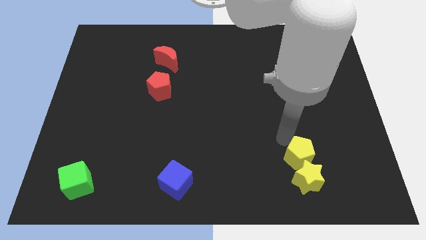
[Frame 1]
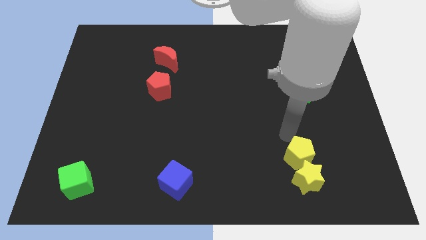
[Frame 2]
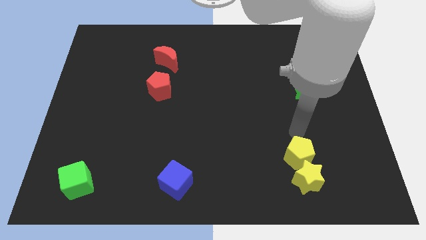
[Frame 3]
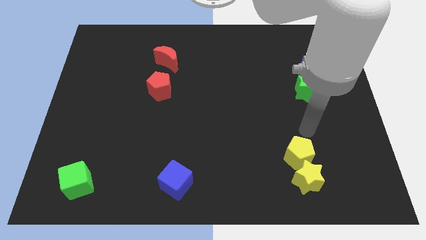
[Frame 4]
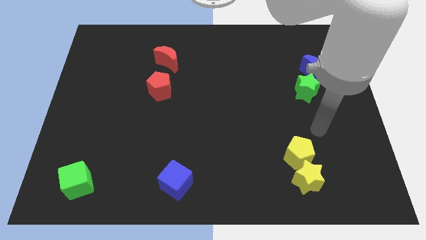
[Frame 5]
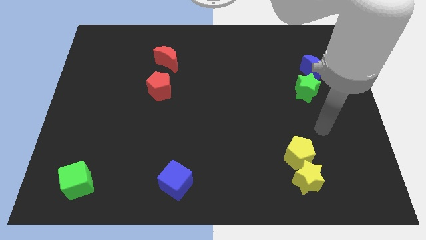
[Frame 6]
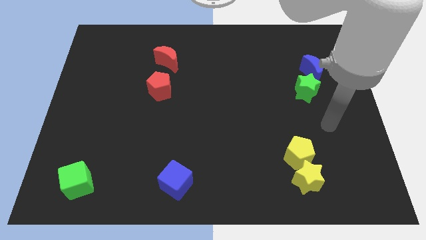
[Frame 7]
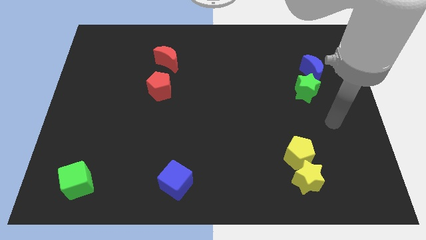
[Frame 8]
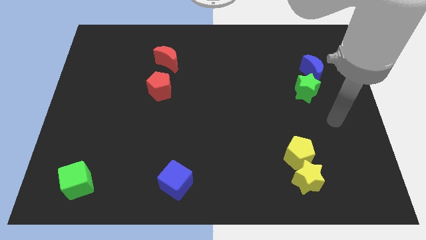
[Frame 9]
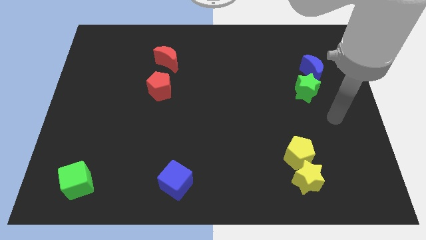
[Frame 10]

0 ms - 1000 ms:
push yellow pentagon in to yellow star

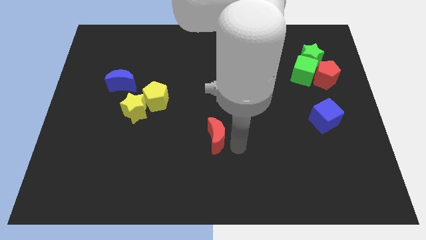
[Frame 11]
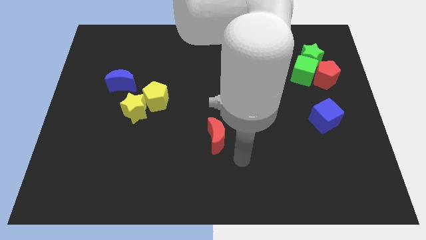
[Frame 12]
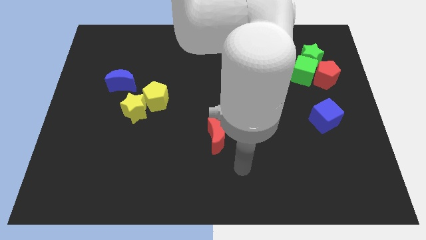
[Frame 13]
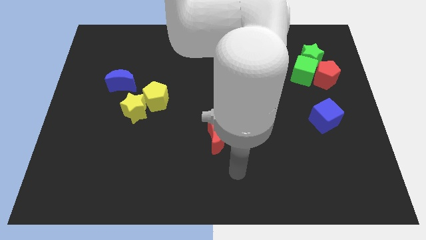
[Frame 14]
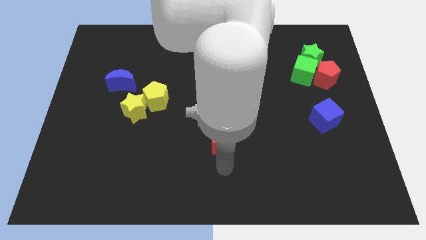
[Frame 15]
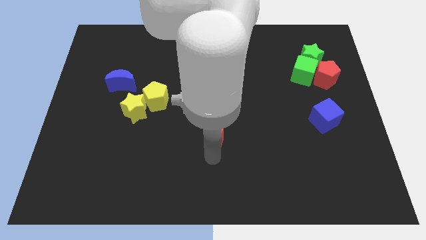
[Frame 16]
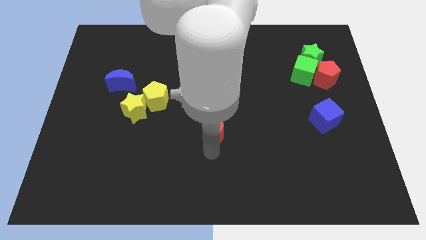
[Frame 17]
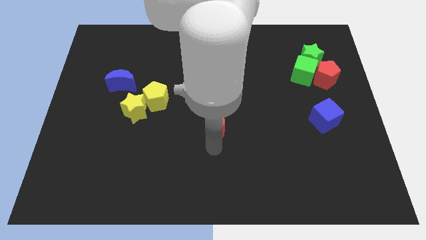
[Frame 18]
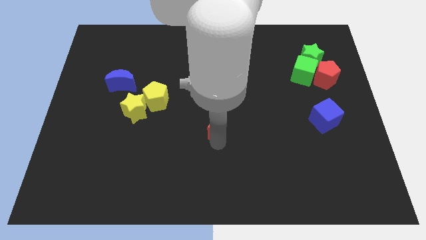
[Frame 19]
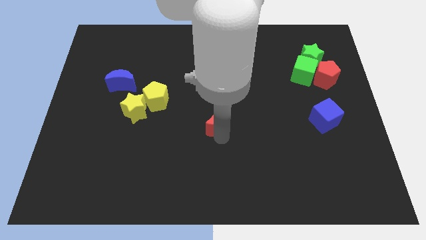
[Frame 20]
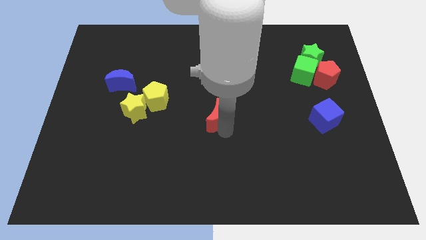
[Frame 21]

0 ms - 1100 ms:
place the red crescent at the center of the board

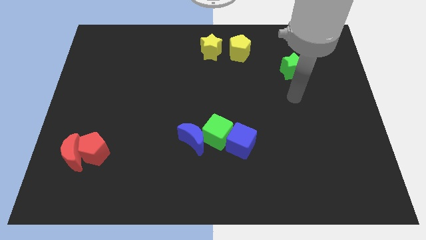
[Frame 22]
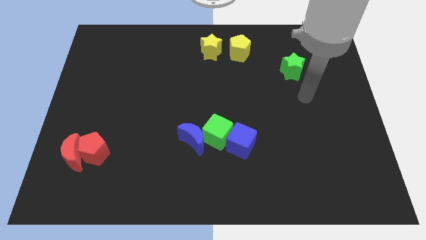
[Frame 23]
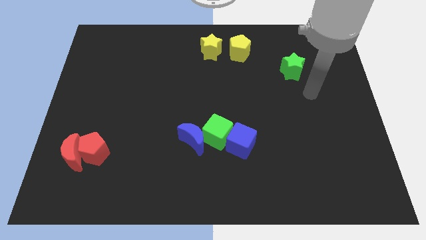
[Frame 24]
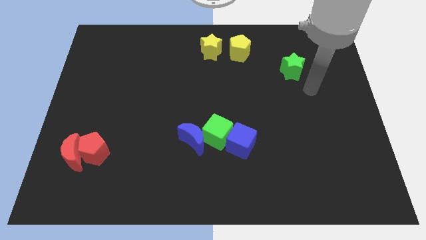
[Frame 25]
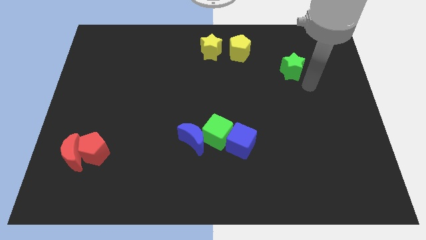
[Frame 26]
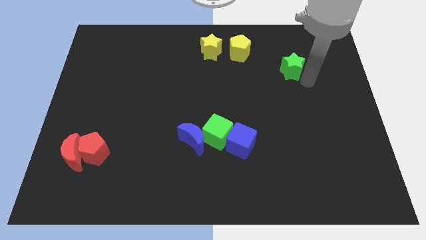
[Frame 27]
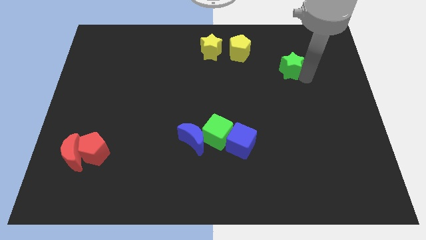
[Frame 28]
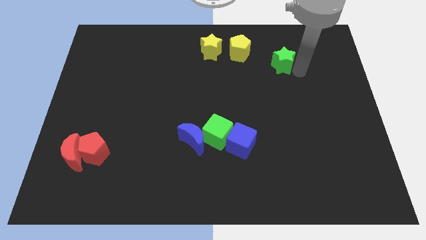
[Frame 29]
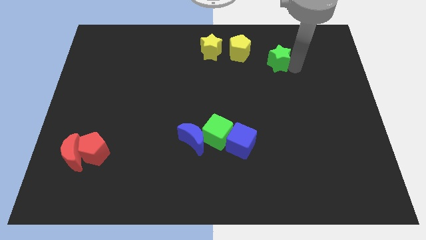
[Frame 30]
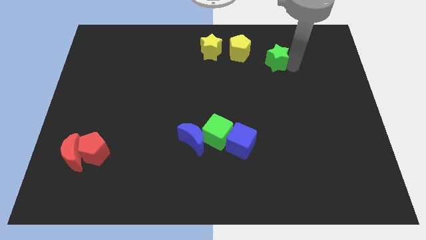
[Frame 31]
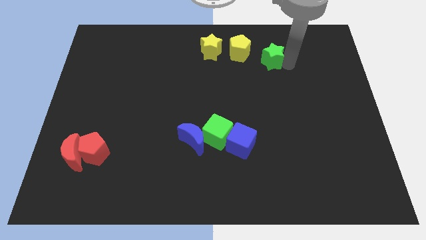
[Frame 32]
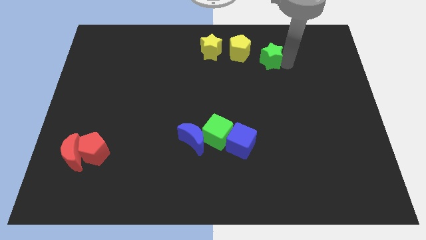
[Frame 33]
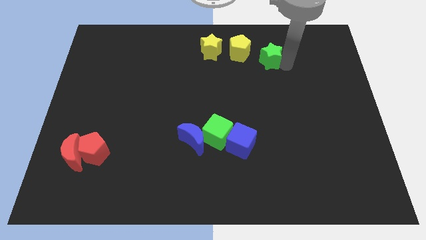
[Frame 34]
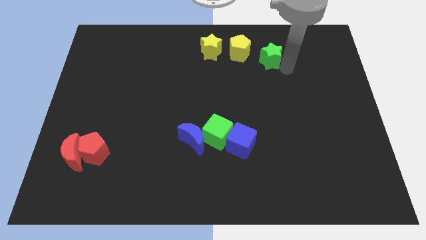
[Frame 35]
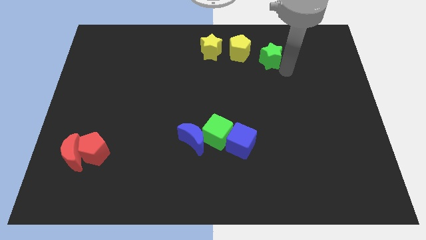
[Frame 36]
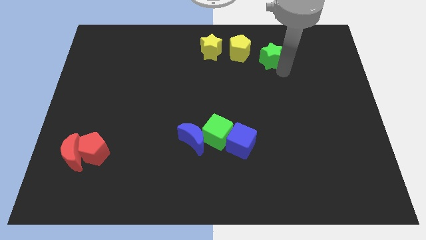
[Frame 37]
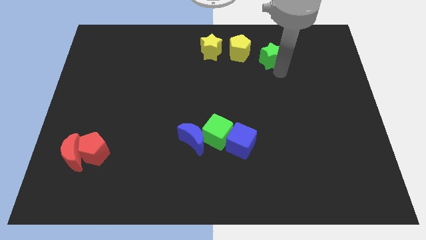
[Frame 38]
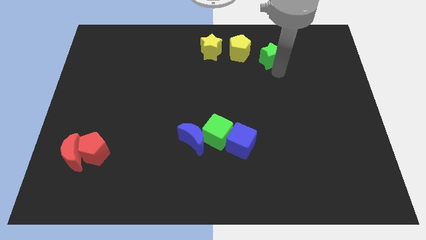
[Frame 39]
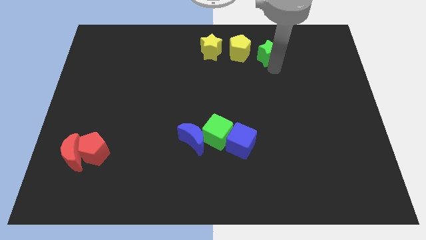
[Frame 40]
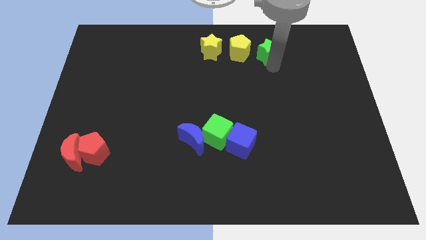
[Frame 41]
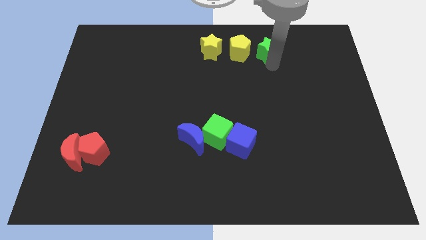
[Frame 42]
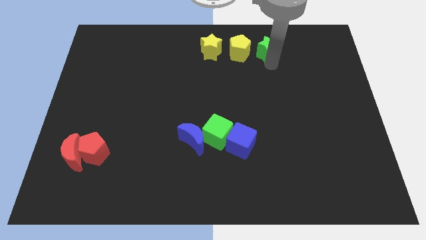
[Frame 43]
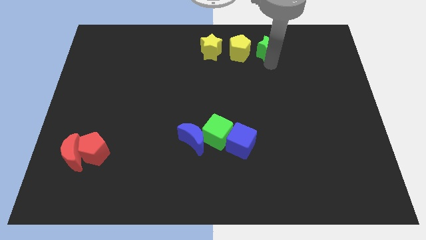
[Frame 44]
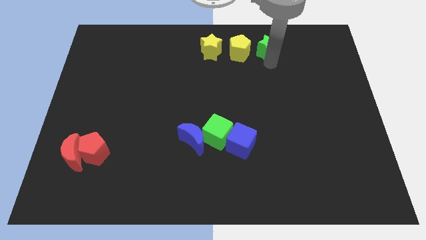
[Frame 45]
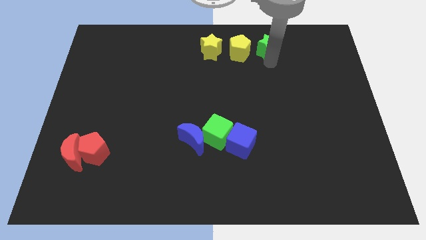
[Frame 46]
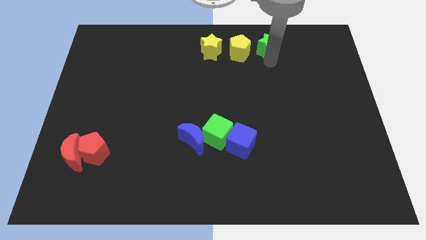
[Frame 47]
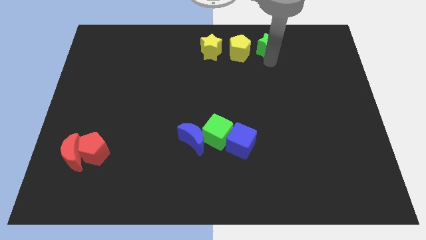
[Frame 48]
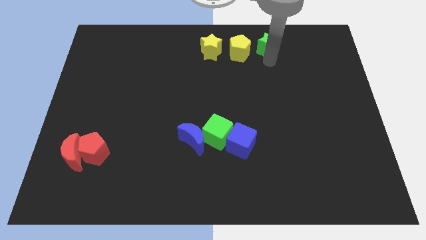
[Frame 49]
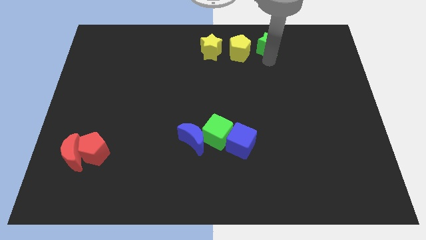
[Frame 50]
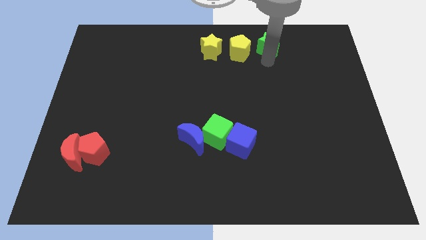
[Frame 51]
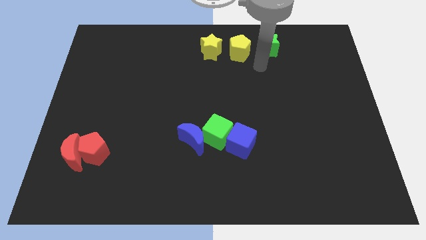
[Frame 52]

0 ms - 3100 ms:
place the green star towards right side of the yellow pentagon

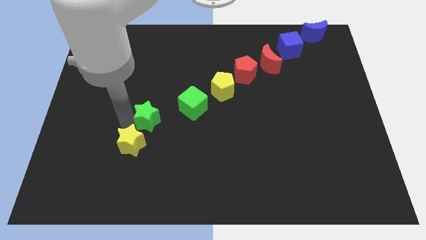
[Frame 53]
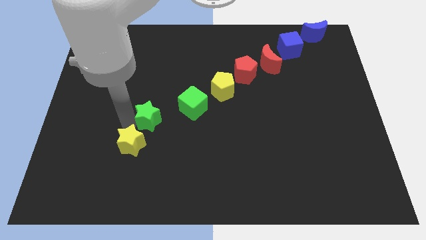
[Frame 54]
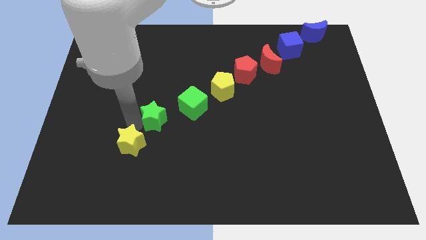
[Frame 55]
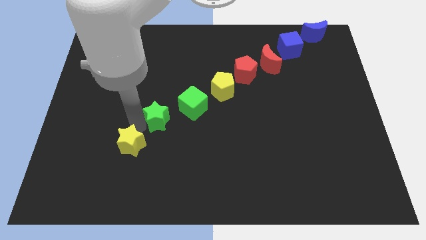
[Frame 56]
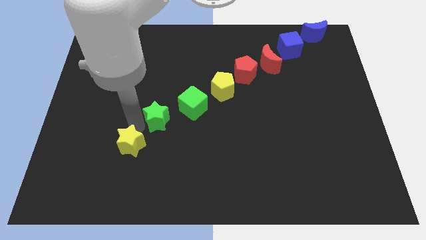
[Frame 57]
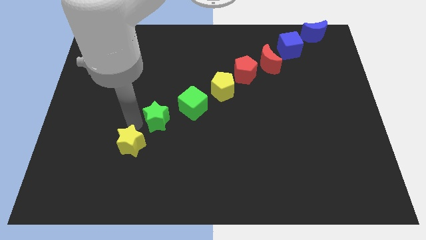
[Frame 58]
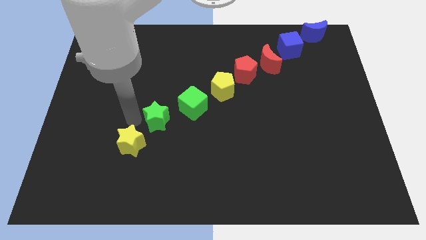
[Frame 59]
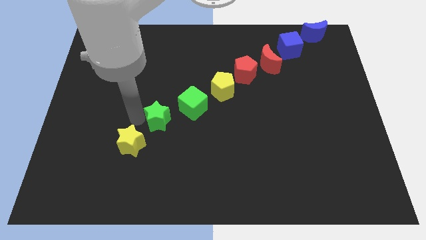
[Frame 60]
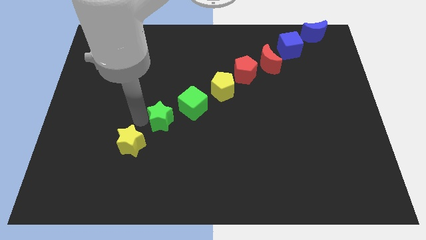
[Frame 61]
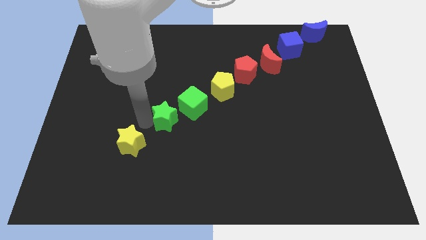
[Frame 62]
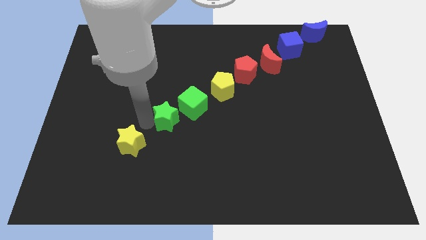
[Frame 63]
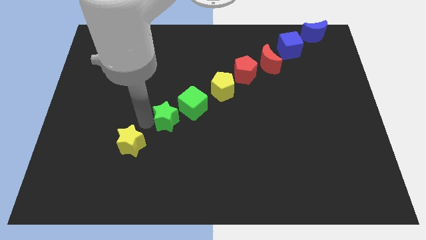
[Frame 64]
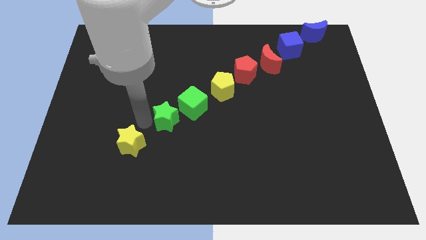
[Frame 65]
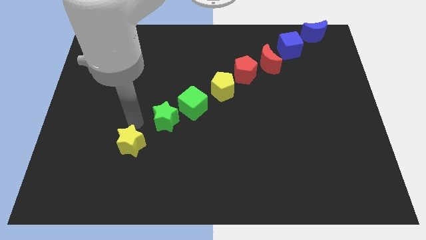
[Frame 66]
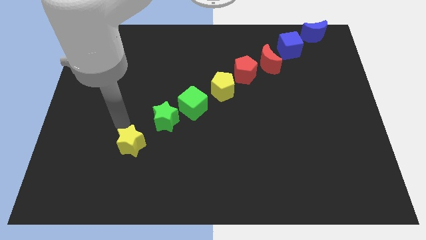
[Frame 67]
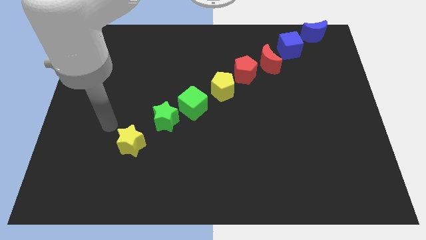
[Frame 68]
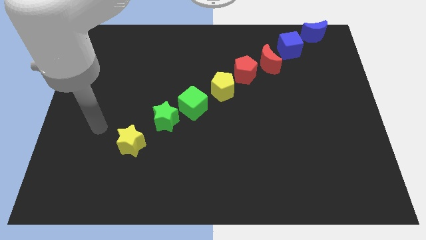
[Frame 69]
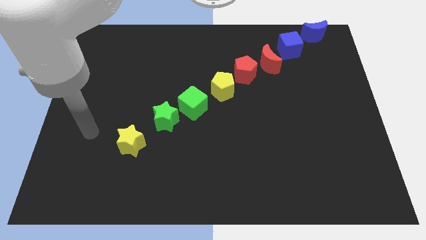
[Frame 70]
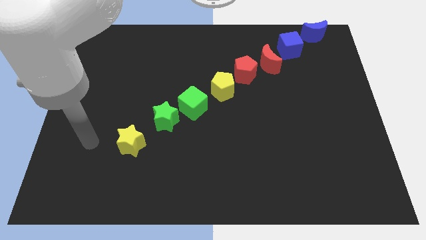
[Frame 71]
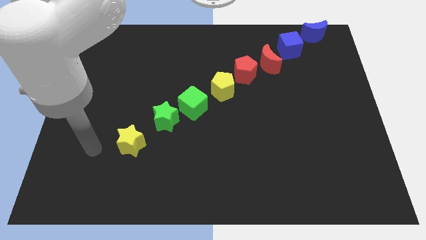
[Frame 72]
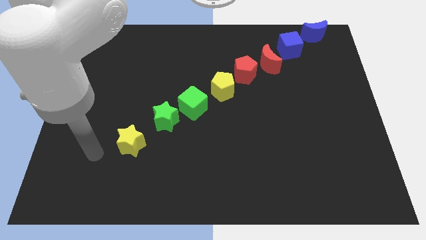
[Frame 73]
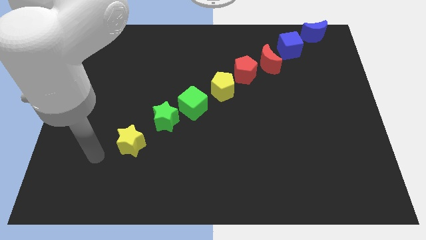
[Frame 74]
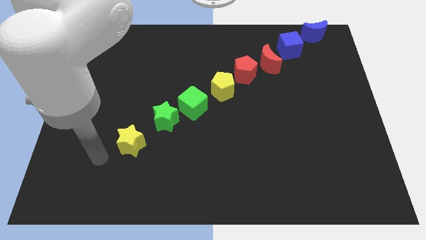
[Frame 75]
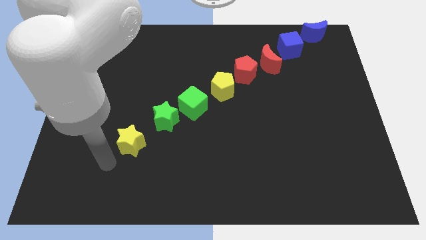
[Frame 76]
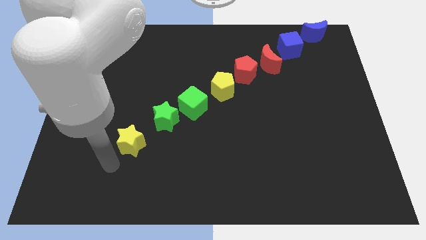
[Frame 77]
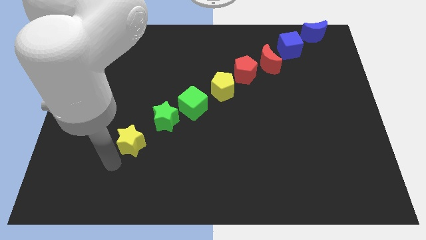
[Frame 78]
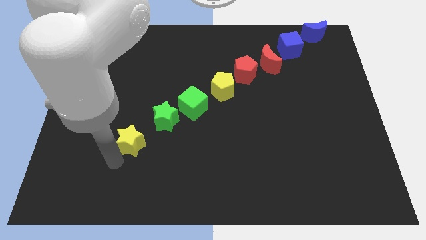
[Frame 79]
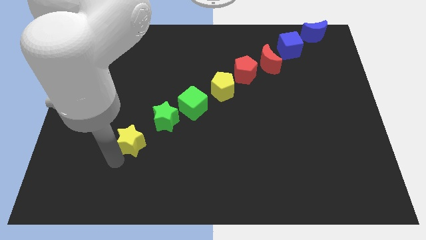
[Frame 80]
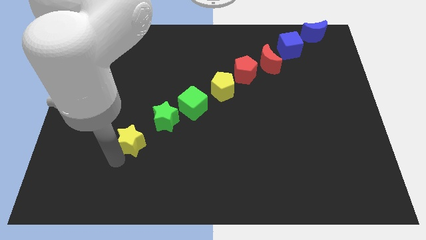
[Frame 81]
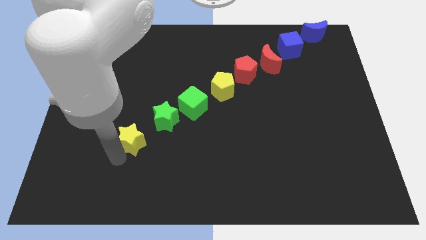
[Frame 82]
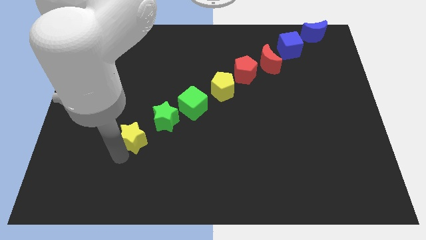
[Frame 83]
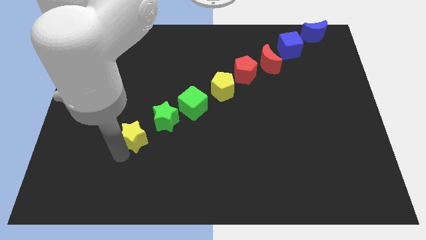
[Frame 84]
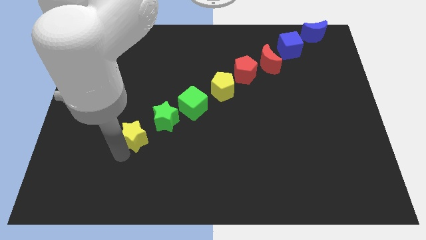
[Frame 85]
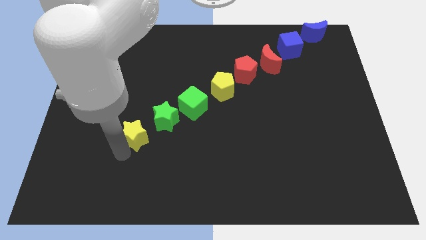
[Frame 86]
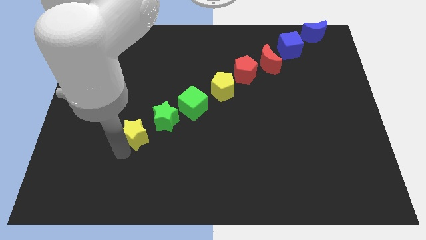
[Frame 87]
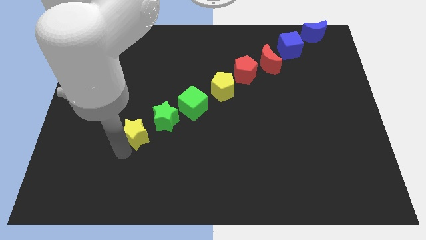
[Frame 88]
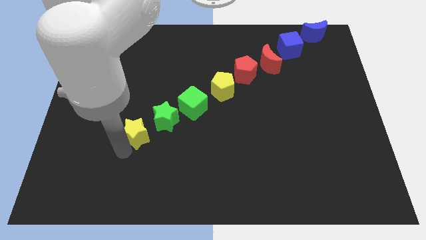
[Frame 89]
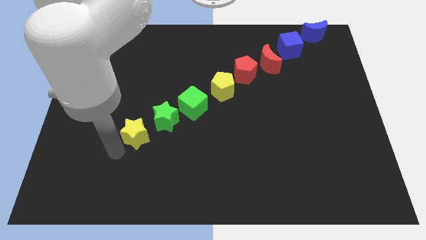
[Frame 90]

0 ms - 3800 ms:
push the yellow star slightly up
